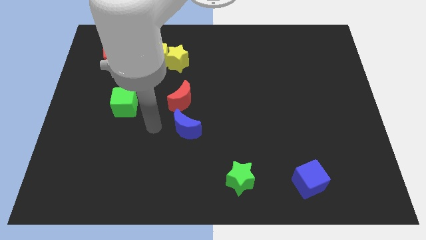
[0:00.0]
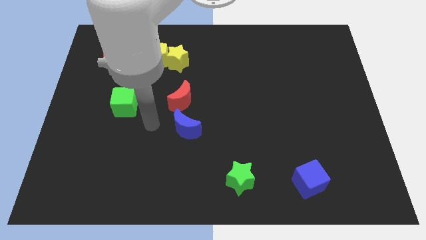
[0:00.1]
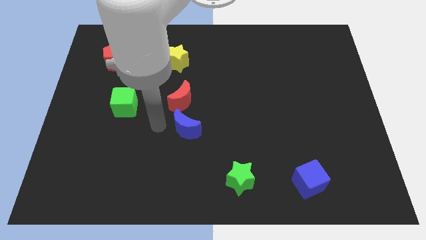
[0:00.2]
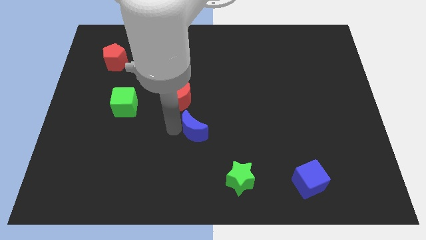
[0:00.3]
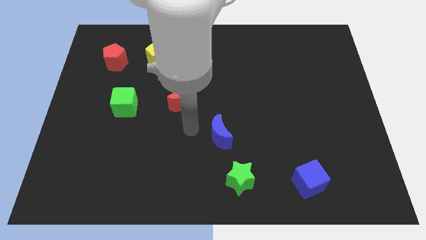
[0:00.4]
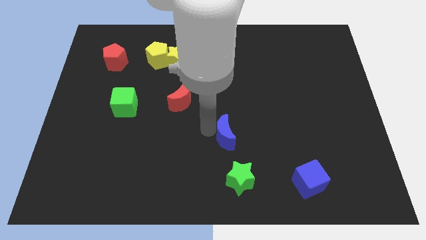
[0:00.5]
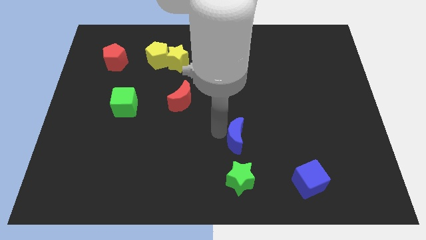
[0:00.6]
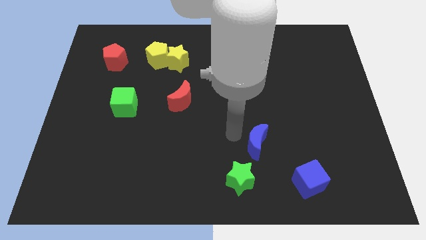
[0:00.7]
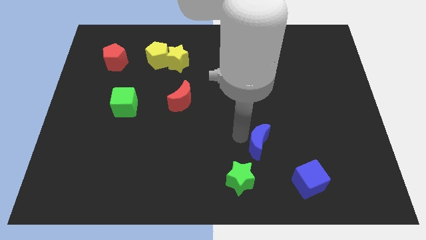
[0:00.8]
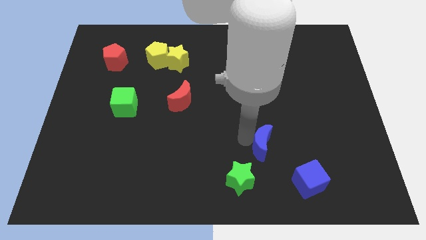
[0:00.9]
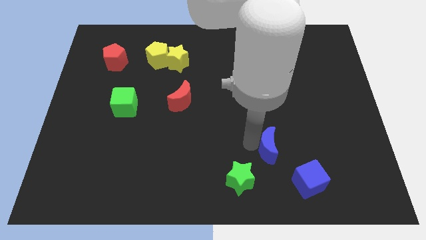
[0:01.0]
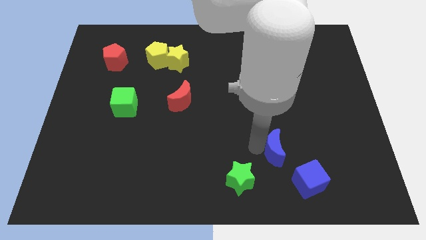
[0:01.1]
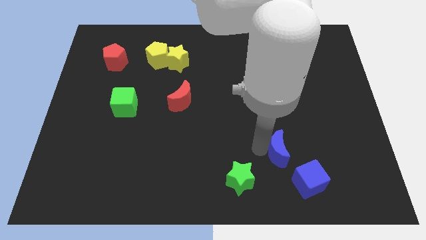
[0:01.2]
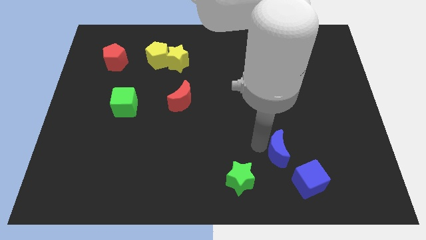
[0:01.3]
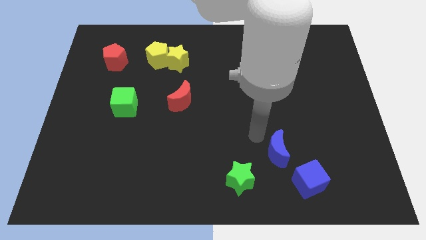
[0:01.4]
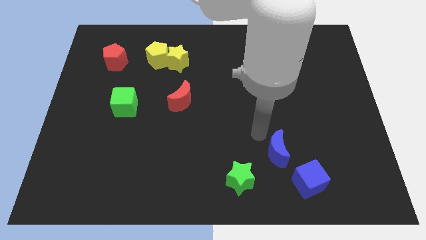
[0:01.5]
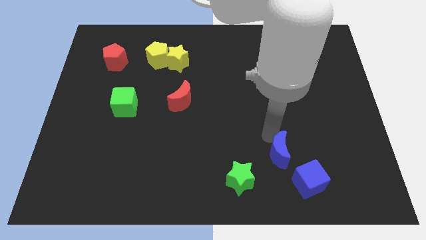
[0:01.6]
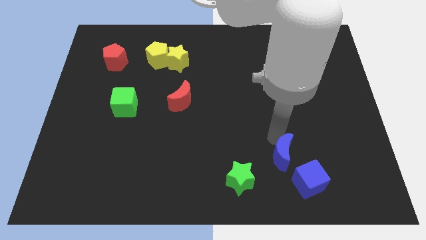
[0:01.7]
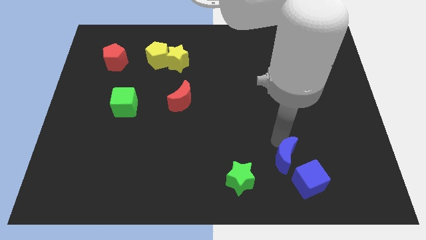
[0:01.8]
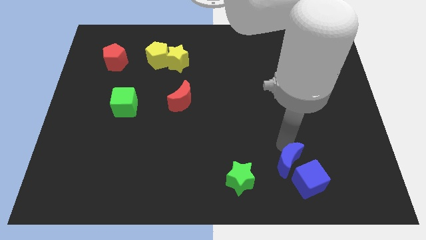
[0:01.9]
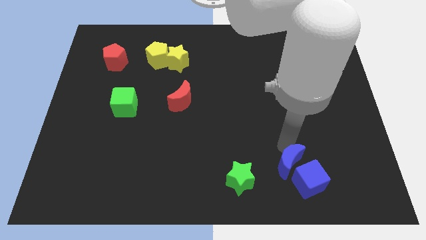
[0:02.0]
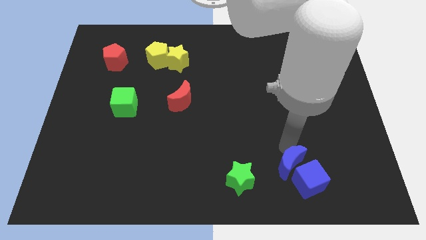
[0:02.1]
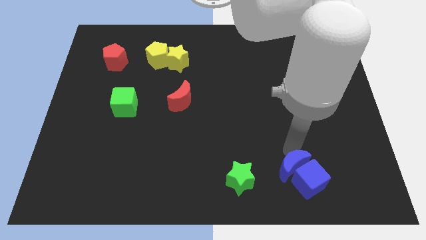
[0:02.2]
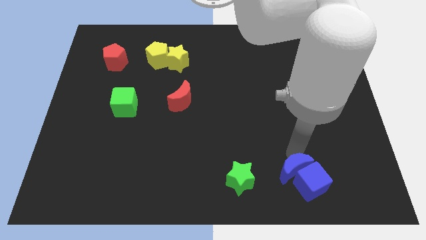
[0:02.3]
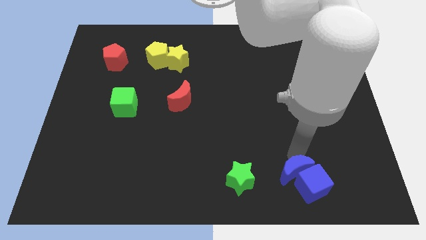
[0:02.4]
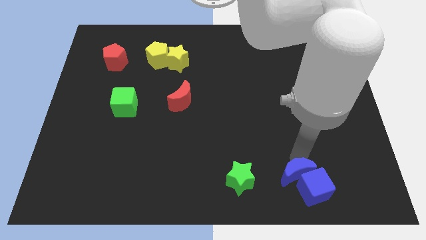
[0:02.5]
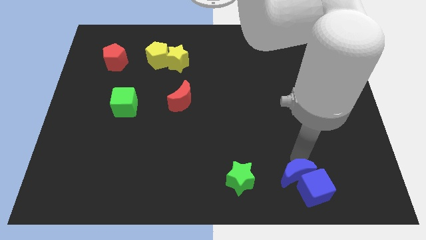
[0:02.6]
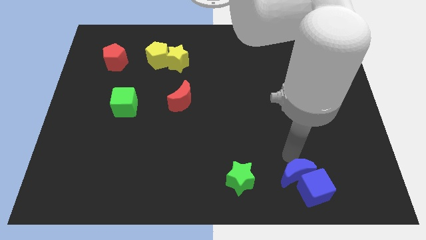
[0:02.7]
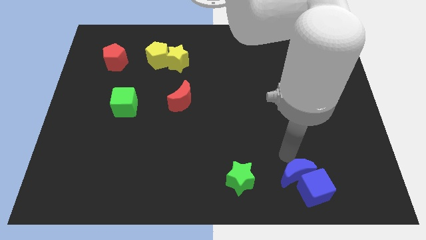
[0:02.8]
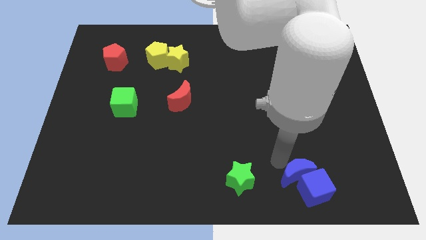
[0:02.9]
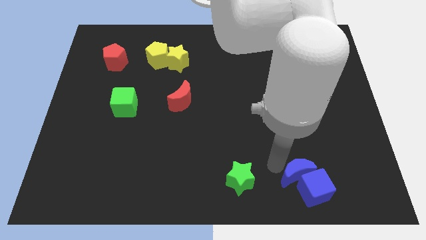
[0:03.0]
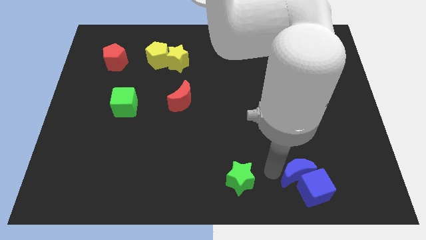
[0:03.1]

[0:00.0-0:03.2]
push the blue crescent into the blue cube

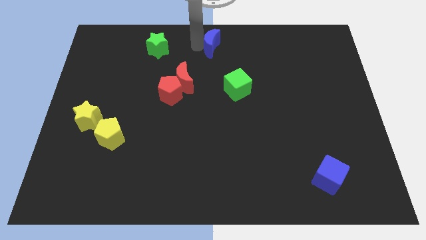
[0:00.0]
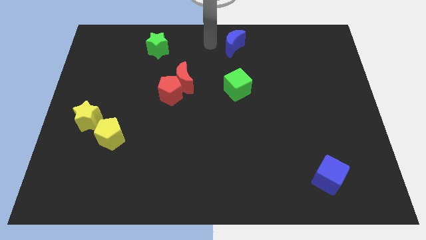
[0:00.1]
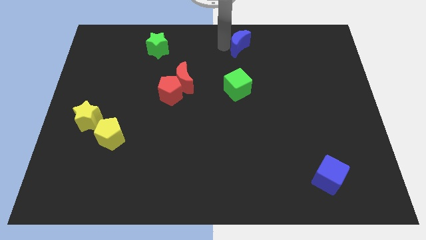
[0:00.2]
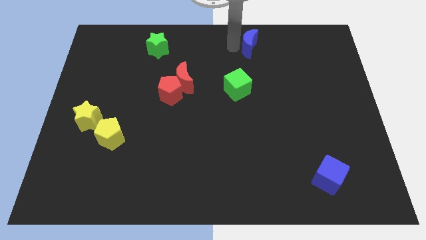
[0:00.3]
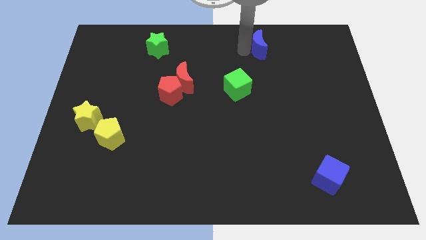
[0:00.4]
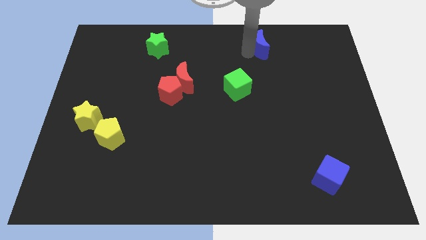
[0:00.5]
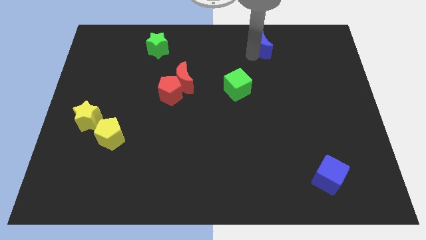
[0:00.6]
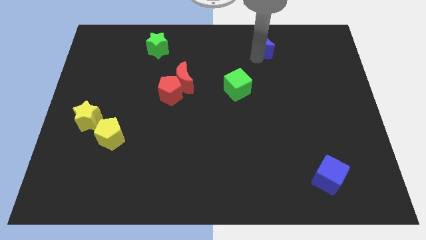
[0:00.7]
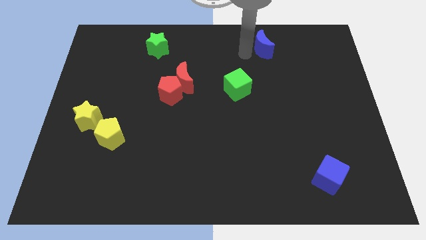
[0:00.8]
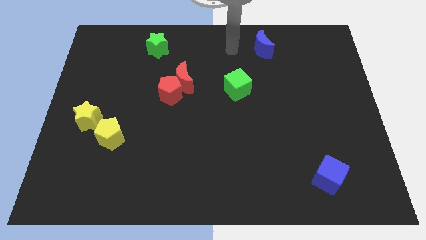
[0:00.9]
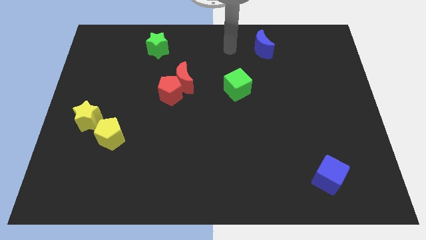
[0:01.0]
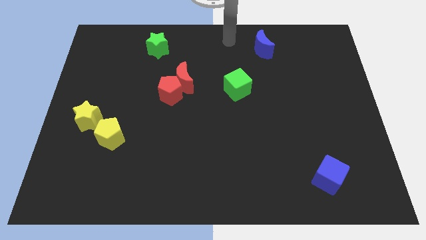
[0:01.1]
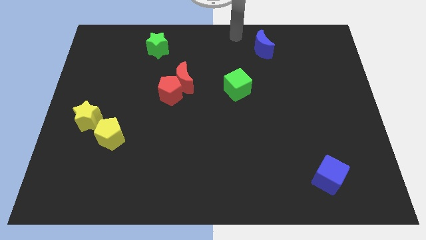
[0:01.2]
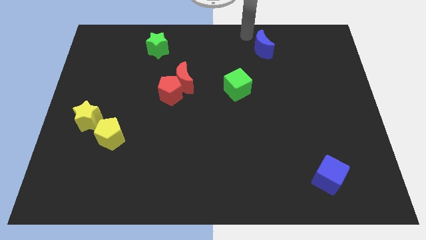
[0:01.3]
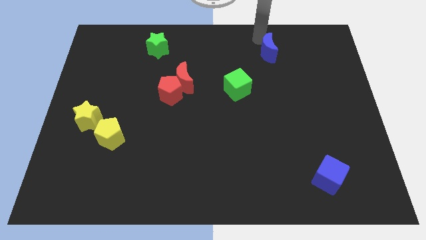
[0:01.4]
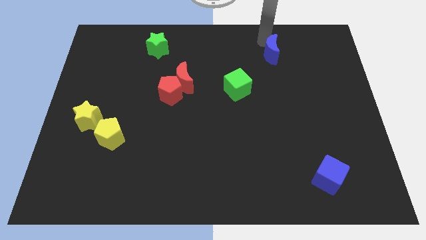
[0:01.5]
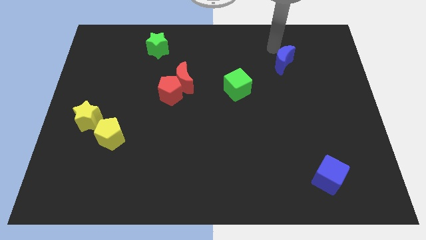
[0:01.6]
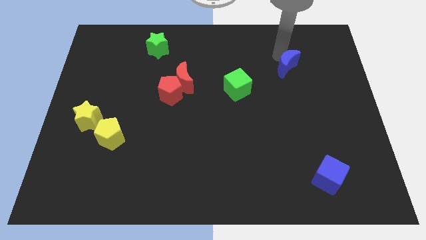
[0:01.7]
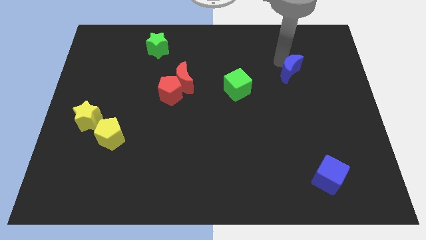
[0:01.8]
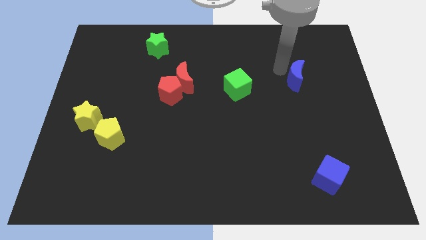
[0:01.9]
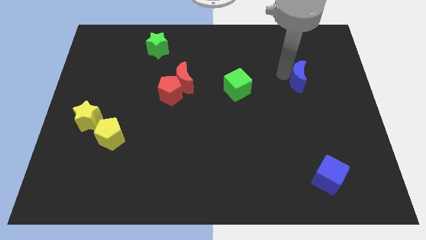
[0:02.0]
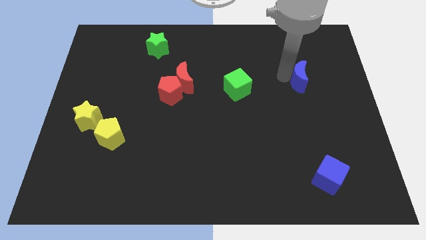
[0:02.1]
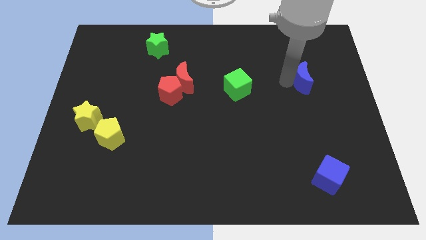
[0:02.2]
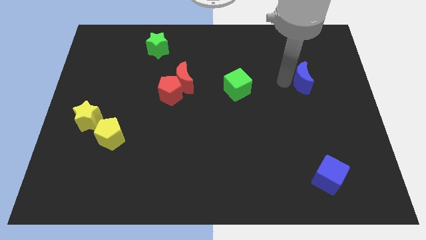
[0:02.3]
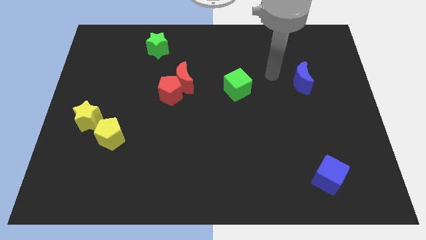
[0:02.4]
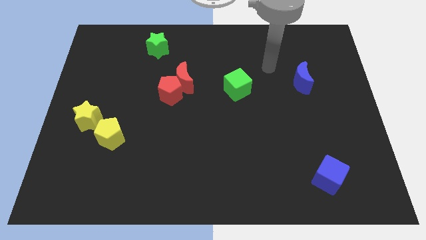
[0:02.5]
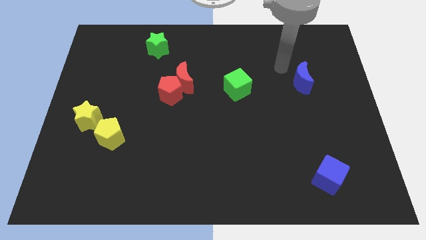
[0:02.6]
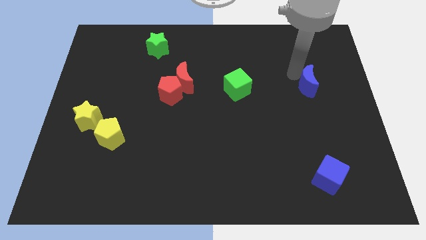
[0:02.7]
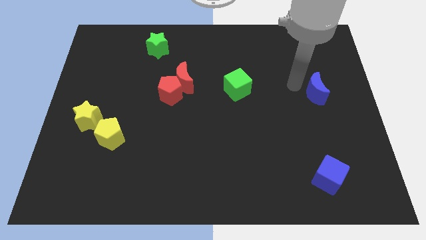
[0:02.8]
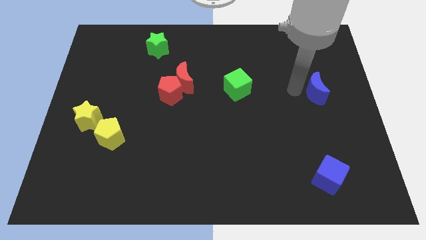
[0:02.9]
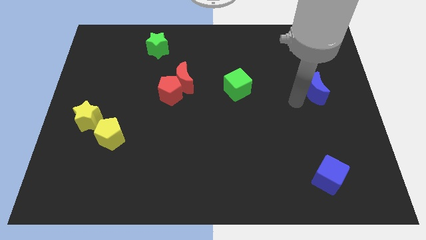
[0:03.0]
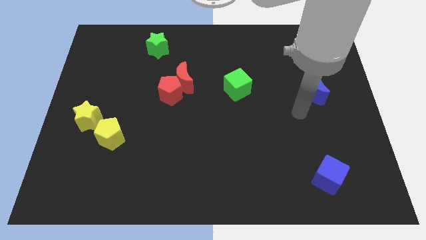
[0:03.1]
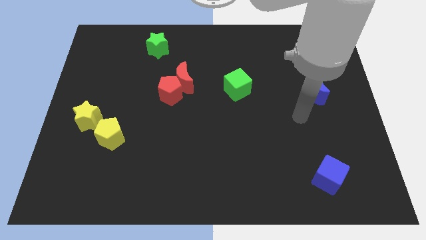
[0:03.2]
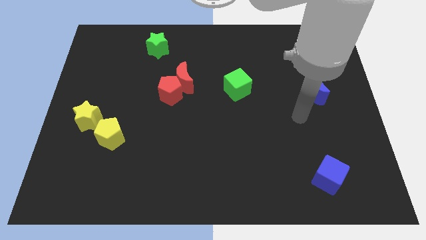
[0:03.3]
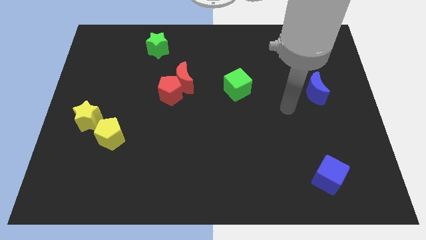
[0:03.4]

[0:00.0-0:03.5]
place the blue crescent vertically above the blue cube

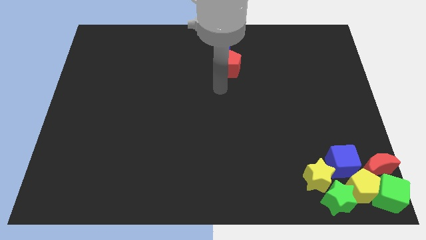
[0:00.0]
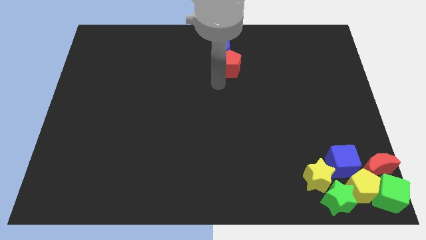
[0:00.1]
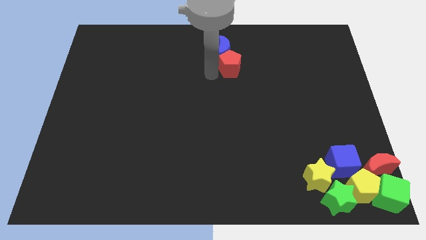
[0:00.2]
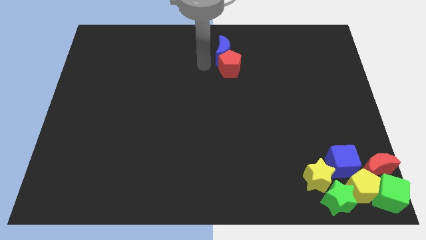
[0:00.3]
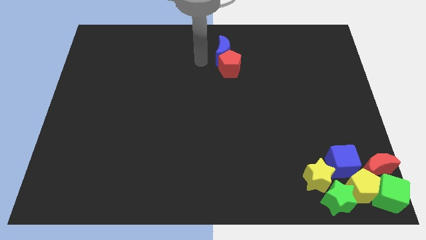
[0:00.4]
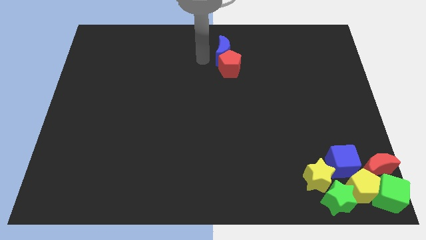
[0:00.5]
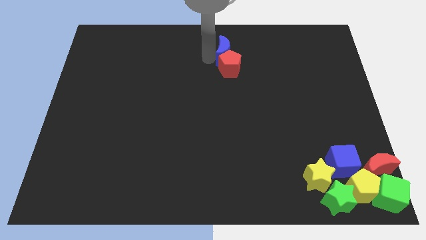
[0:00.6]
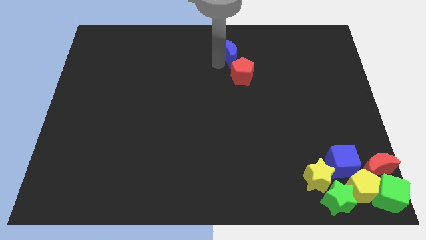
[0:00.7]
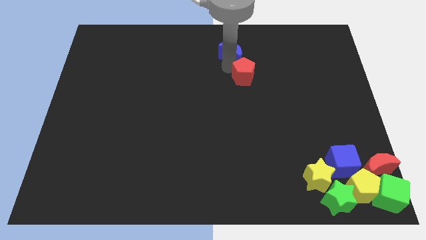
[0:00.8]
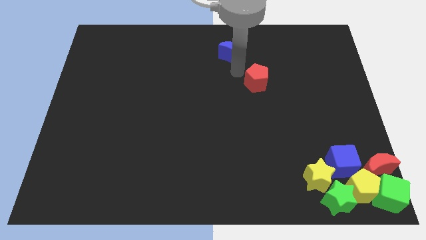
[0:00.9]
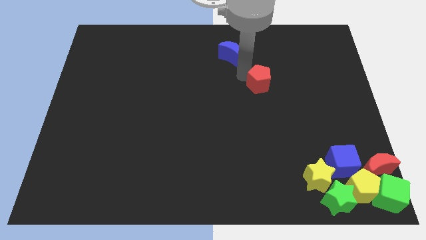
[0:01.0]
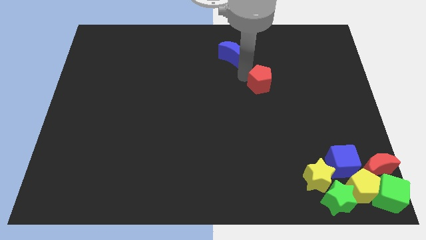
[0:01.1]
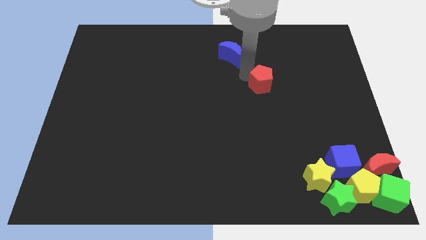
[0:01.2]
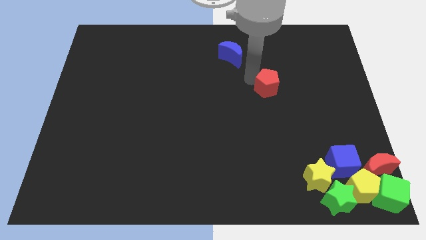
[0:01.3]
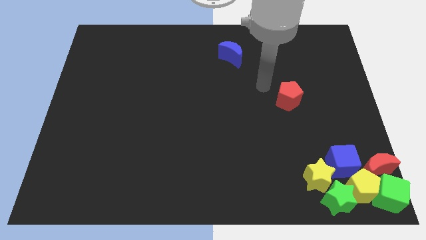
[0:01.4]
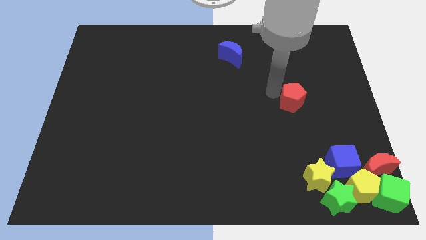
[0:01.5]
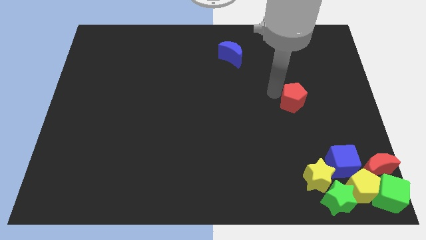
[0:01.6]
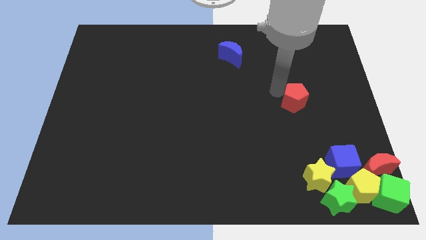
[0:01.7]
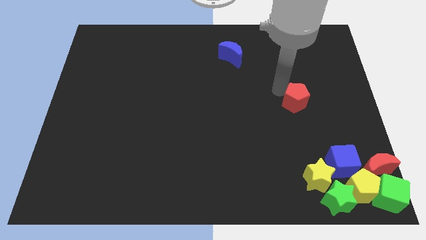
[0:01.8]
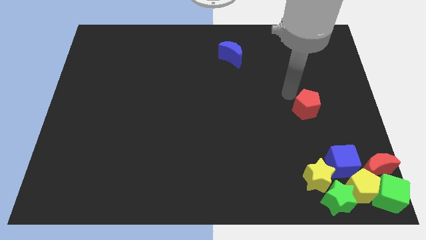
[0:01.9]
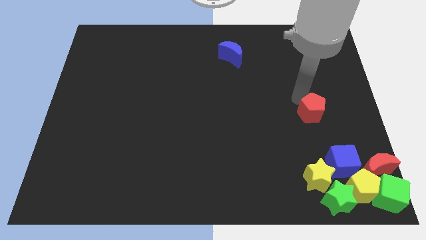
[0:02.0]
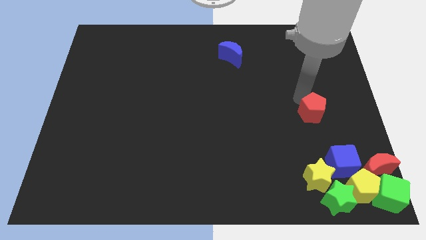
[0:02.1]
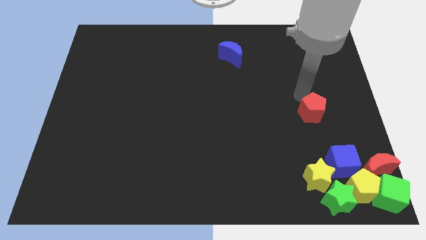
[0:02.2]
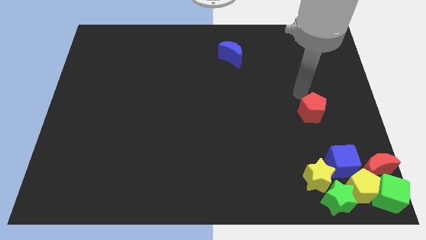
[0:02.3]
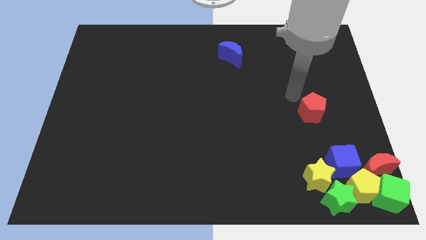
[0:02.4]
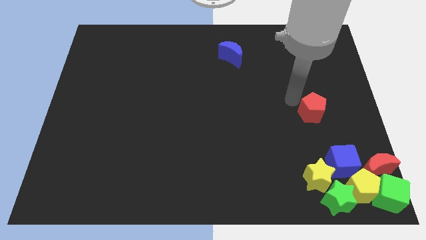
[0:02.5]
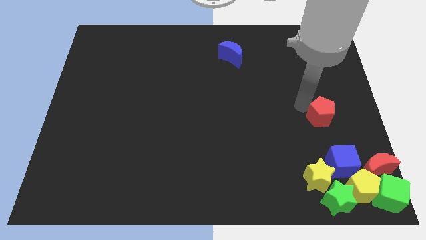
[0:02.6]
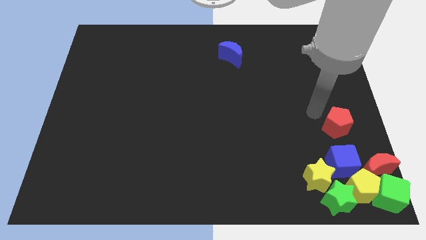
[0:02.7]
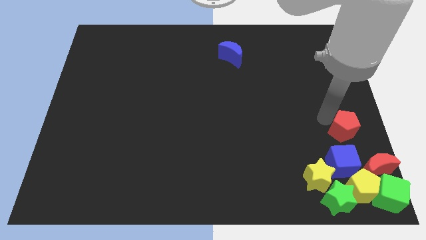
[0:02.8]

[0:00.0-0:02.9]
push red pentagon above blue cube
